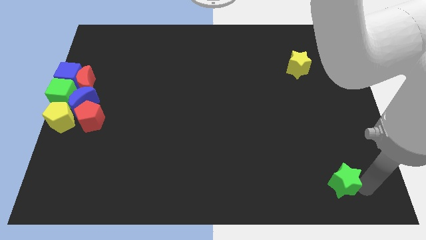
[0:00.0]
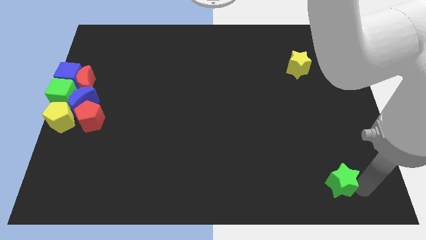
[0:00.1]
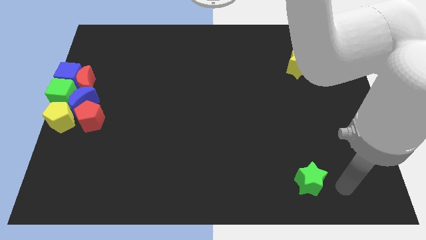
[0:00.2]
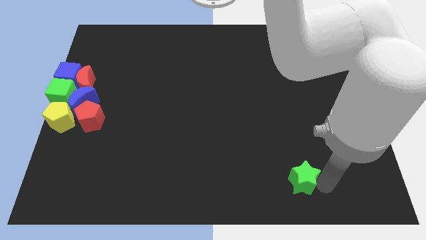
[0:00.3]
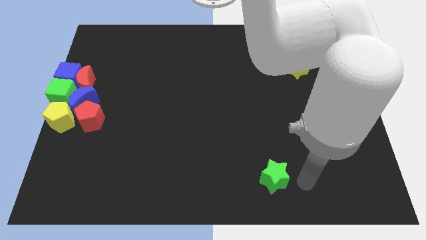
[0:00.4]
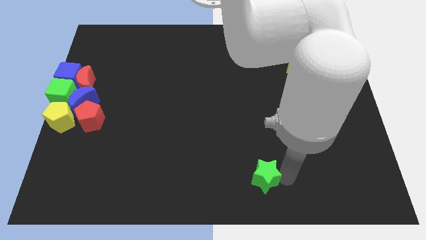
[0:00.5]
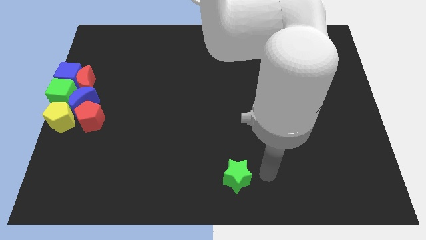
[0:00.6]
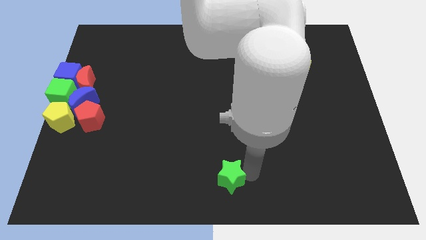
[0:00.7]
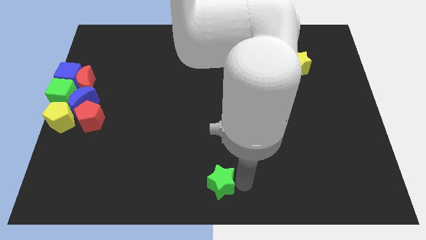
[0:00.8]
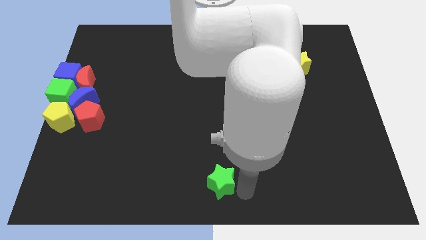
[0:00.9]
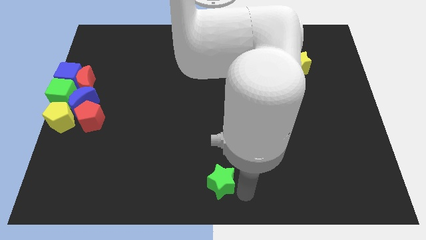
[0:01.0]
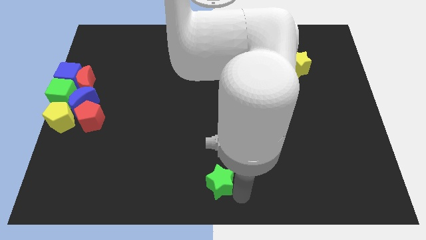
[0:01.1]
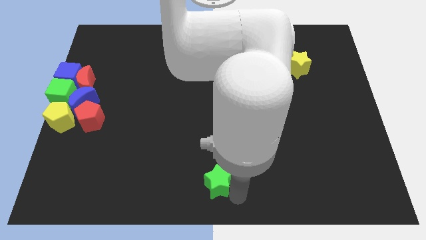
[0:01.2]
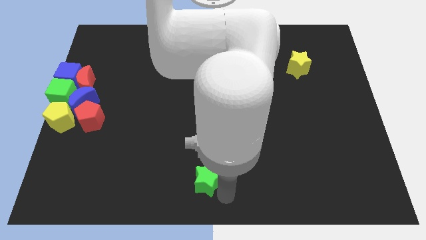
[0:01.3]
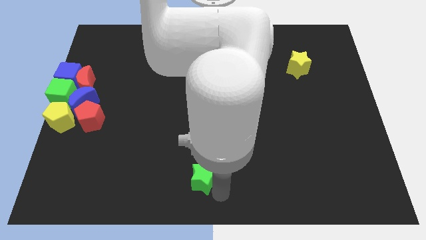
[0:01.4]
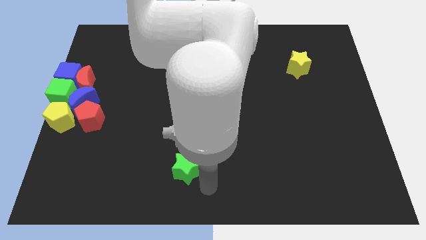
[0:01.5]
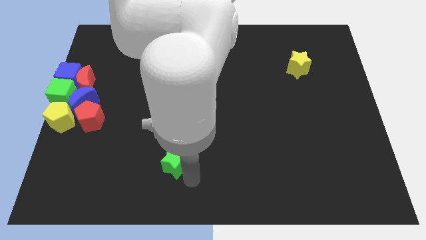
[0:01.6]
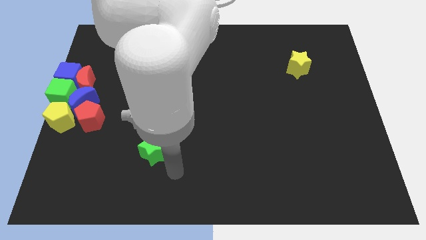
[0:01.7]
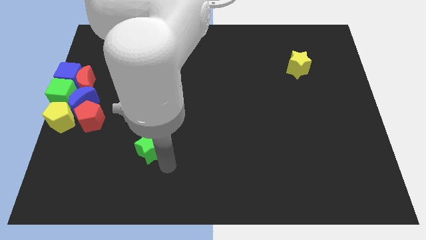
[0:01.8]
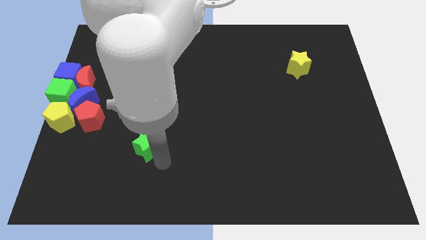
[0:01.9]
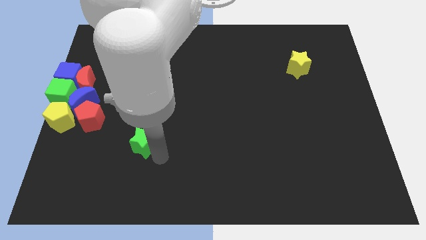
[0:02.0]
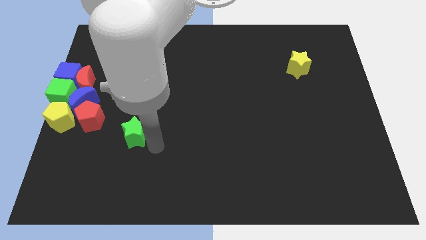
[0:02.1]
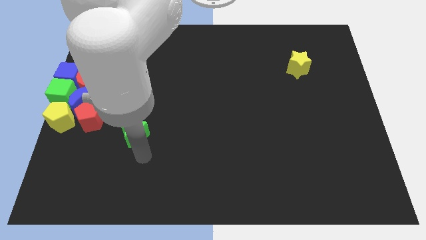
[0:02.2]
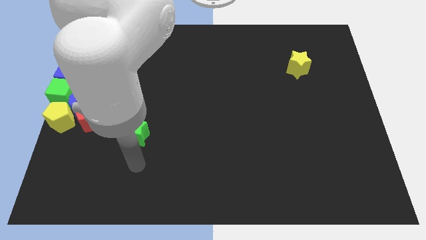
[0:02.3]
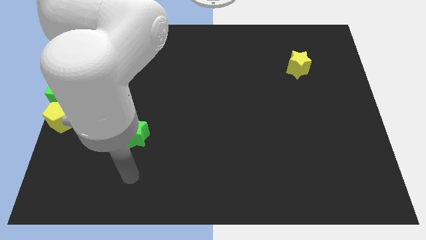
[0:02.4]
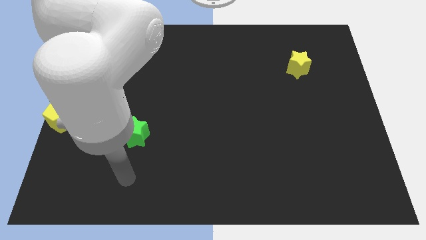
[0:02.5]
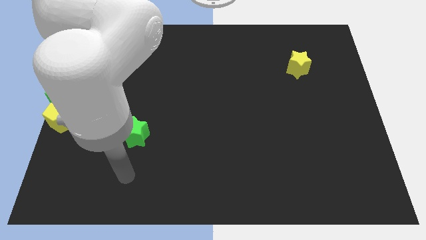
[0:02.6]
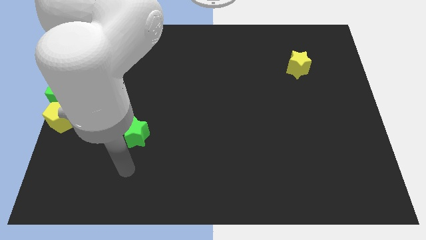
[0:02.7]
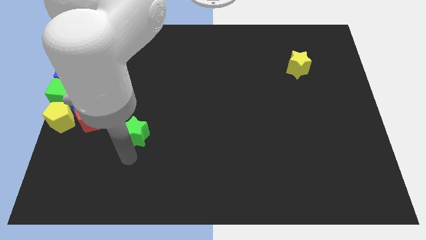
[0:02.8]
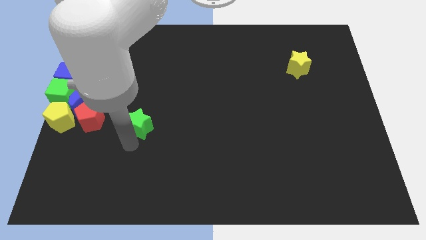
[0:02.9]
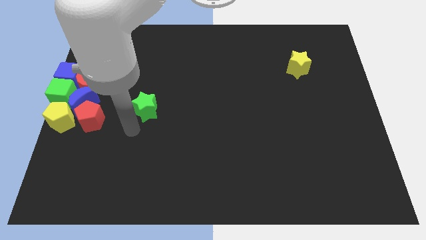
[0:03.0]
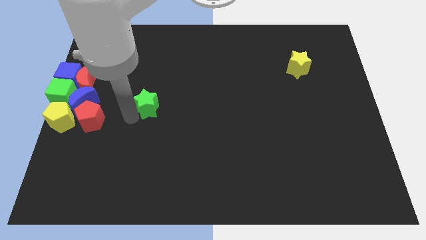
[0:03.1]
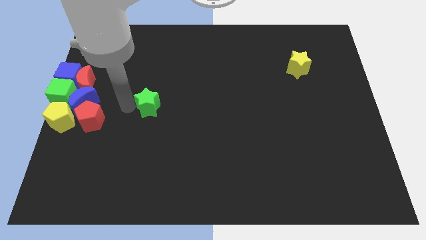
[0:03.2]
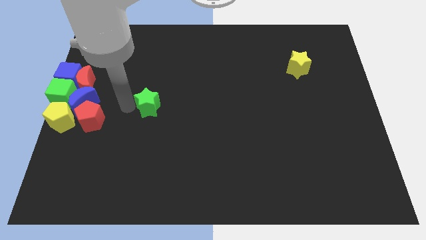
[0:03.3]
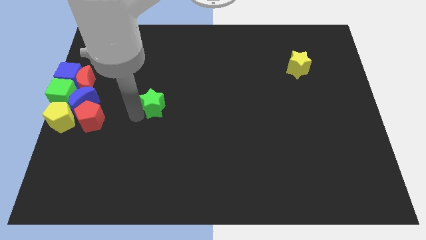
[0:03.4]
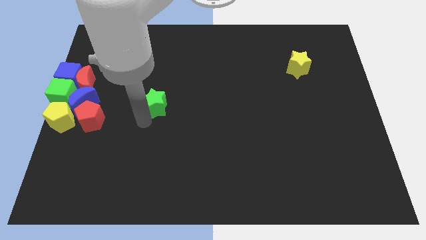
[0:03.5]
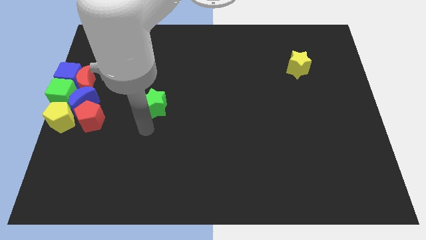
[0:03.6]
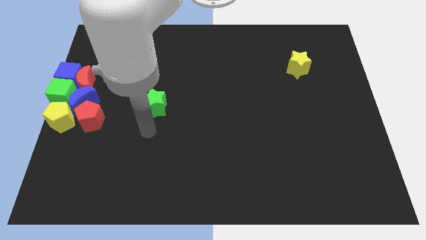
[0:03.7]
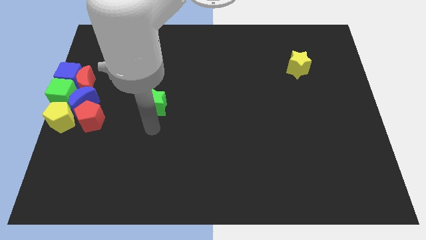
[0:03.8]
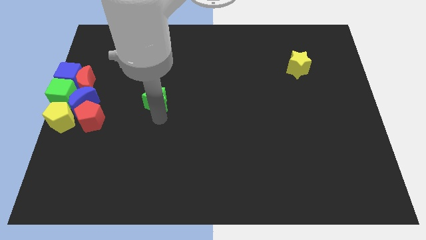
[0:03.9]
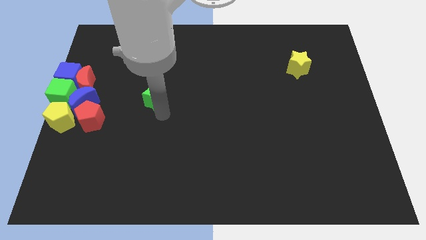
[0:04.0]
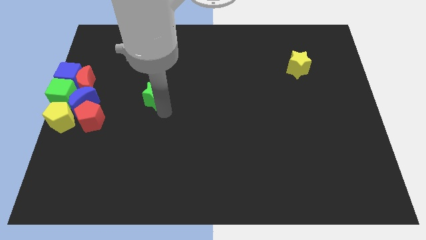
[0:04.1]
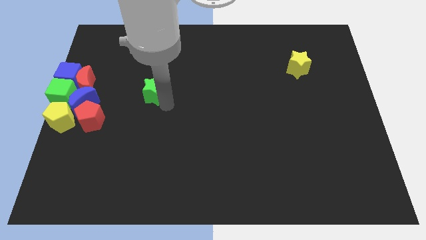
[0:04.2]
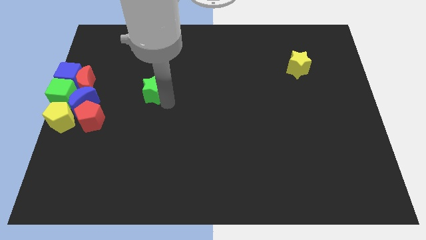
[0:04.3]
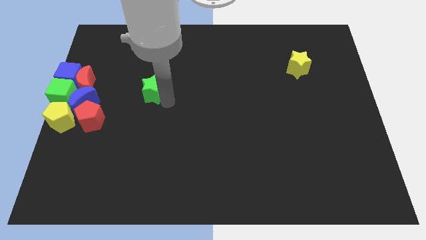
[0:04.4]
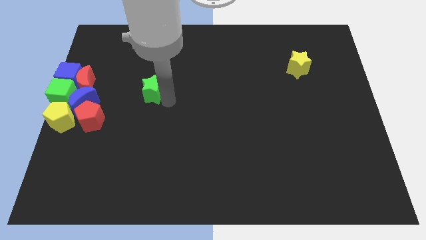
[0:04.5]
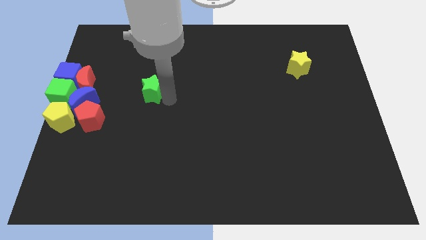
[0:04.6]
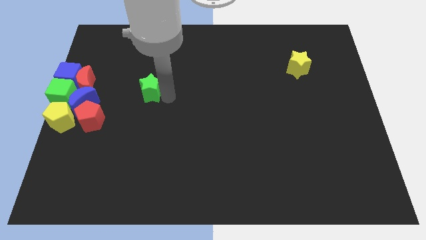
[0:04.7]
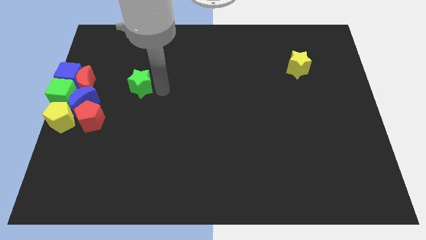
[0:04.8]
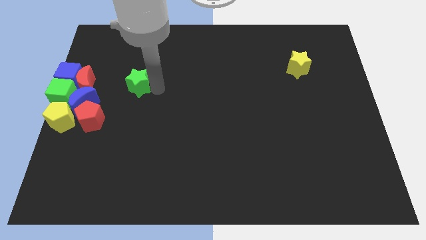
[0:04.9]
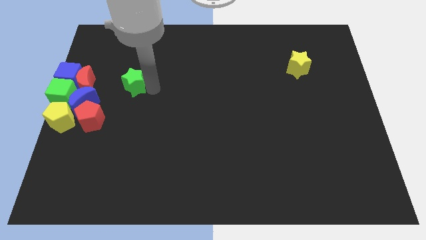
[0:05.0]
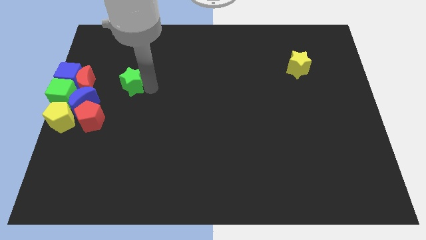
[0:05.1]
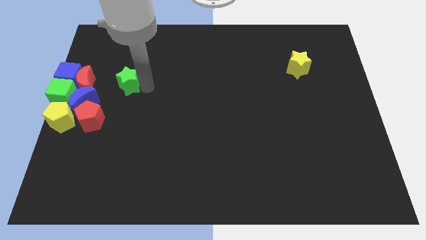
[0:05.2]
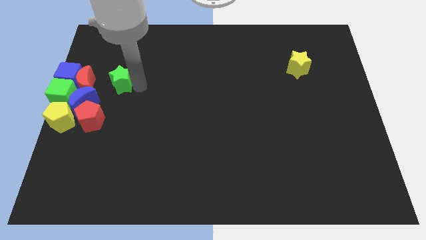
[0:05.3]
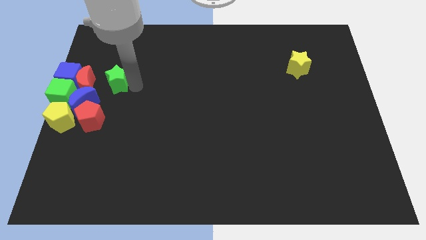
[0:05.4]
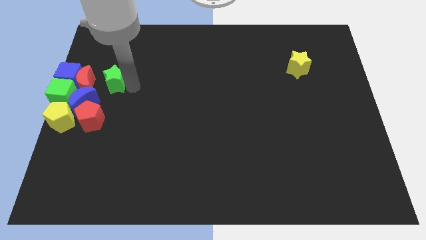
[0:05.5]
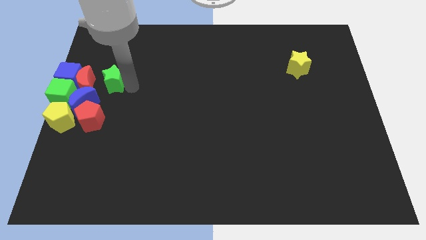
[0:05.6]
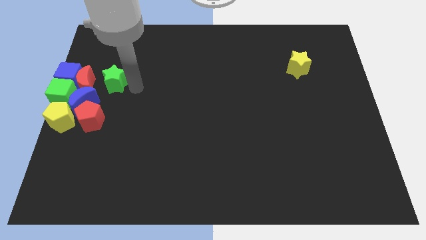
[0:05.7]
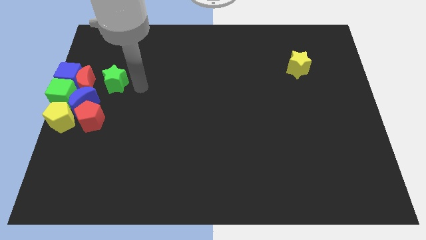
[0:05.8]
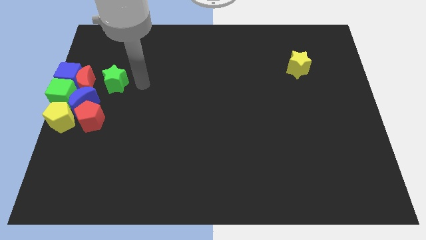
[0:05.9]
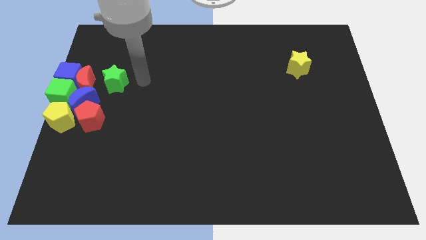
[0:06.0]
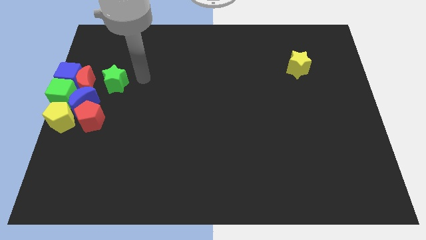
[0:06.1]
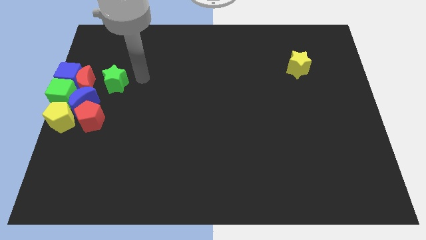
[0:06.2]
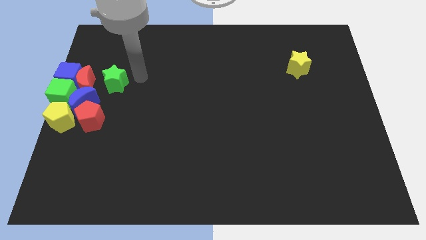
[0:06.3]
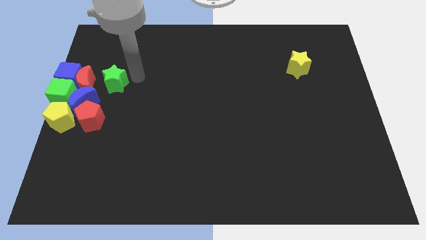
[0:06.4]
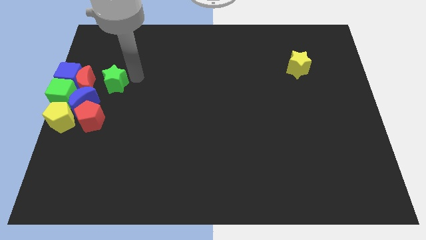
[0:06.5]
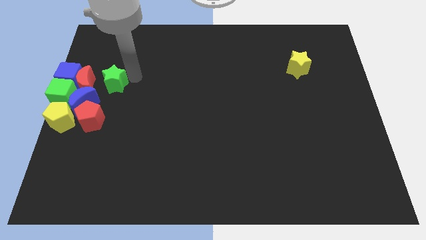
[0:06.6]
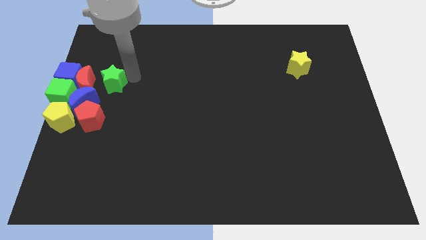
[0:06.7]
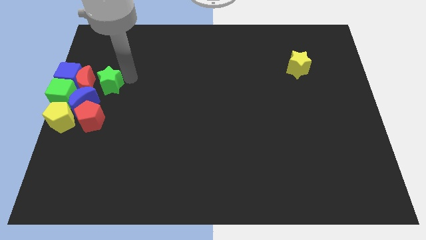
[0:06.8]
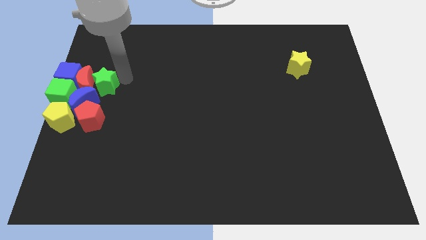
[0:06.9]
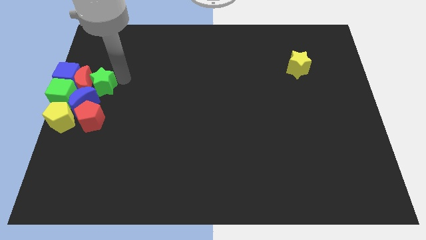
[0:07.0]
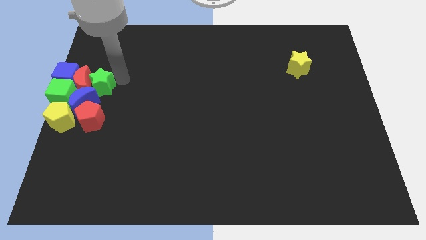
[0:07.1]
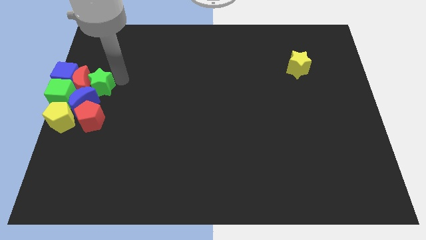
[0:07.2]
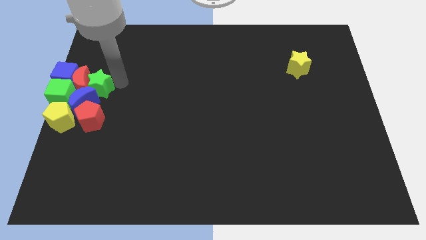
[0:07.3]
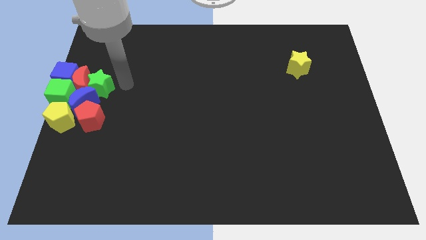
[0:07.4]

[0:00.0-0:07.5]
move the green star to the right of the red moon

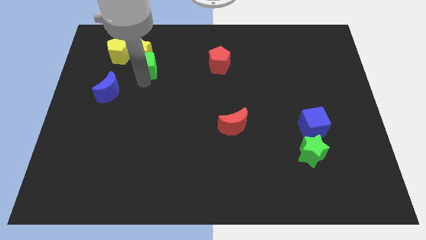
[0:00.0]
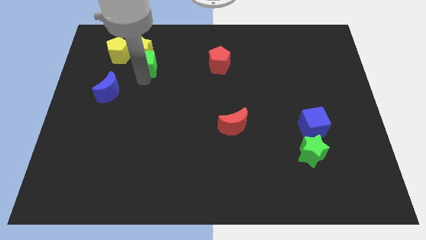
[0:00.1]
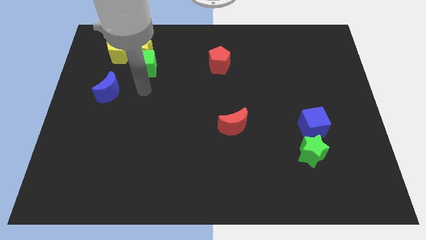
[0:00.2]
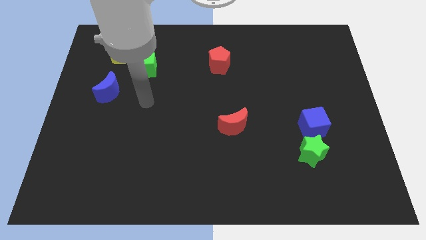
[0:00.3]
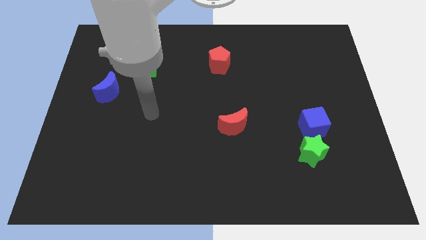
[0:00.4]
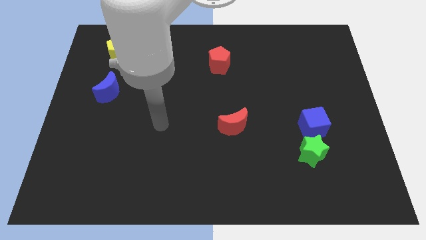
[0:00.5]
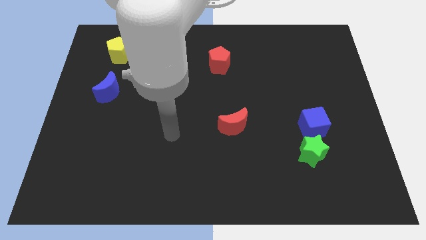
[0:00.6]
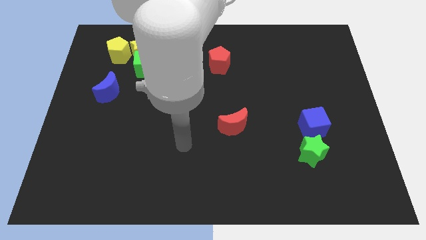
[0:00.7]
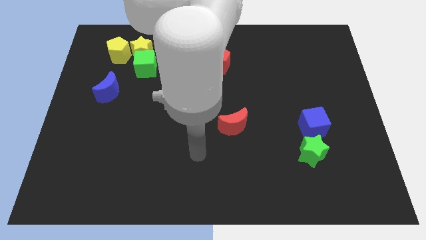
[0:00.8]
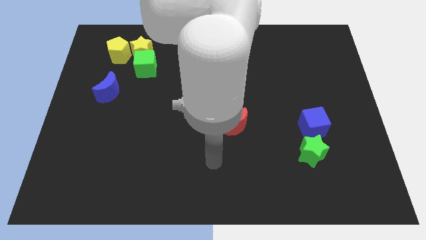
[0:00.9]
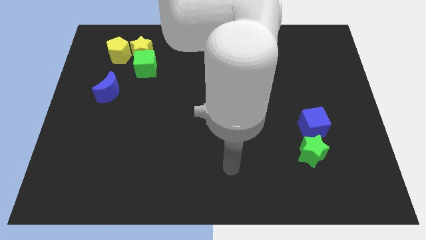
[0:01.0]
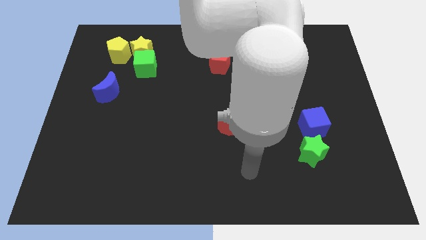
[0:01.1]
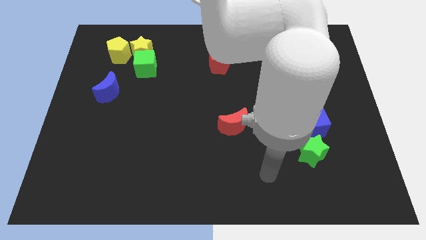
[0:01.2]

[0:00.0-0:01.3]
move your arm away from the green cube
